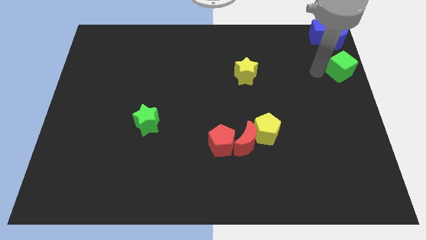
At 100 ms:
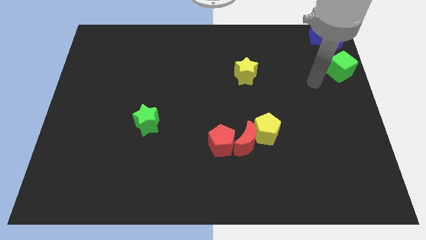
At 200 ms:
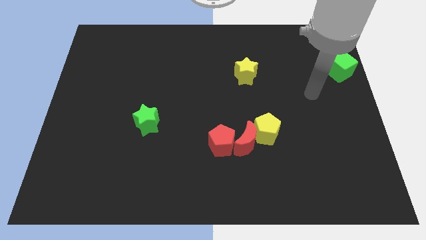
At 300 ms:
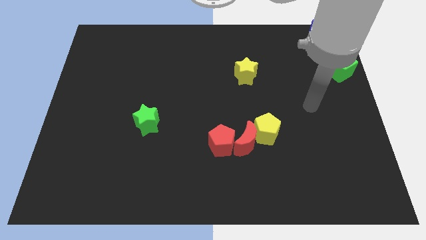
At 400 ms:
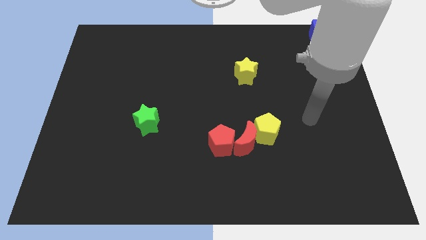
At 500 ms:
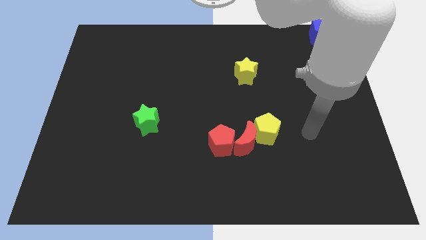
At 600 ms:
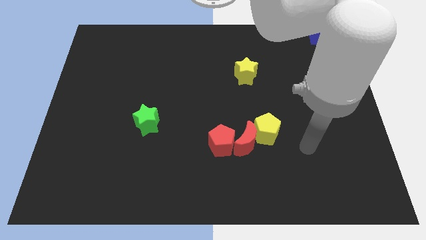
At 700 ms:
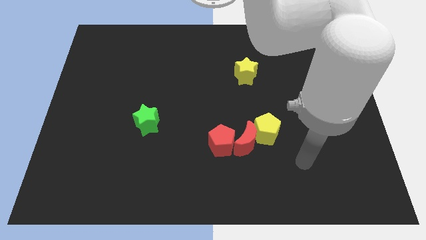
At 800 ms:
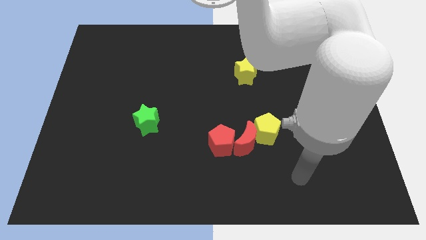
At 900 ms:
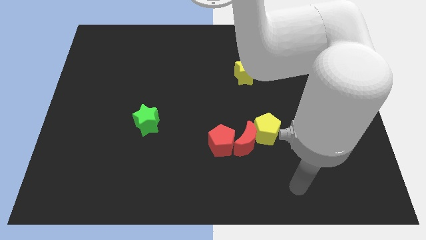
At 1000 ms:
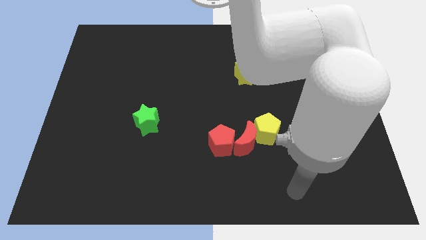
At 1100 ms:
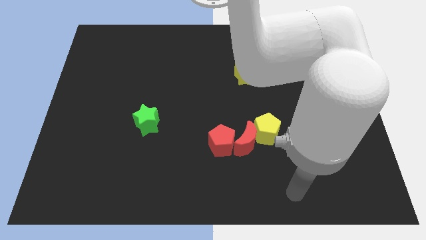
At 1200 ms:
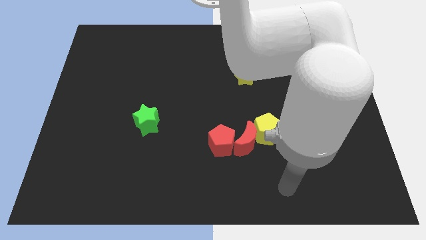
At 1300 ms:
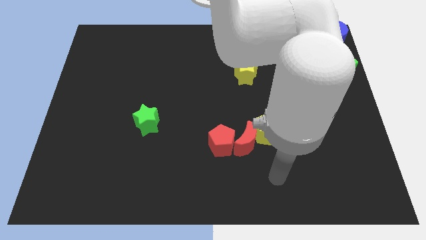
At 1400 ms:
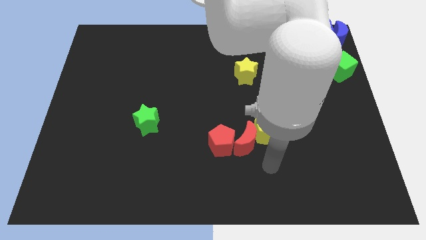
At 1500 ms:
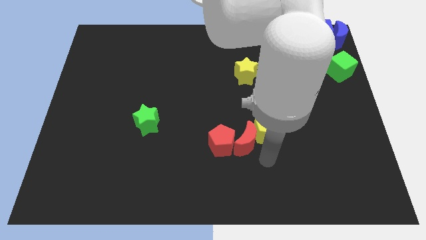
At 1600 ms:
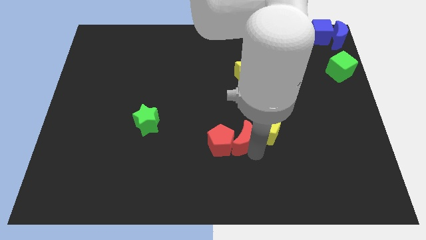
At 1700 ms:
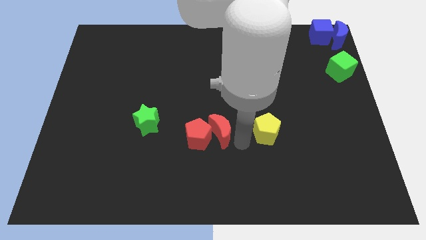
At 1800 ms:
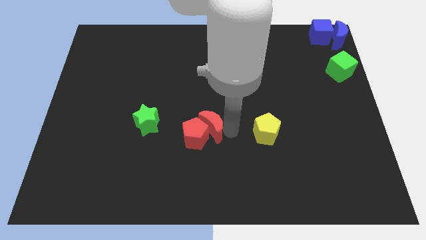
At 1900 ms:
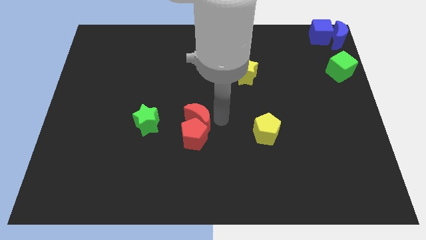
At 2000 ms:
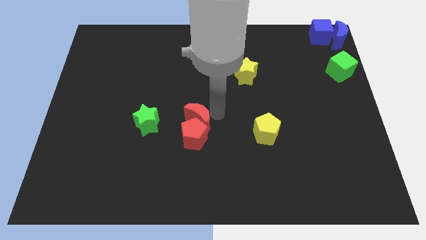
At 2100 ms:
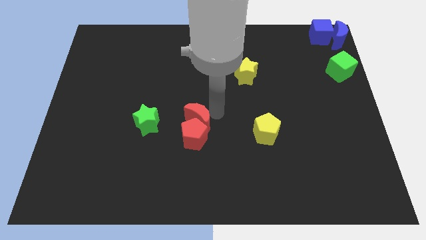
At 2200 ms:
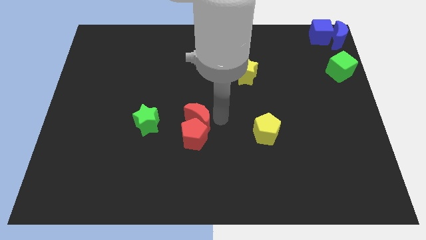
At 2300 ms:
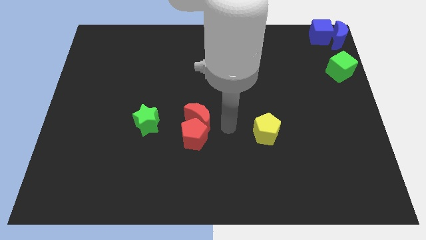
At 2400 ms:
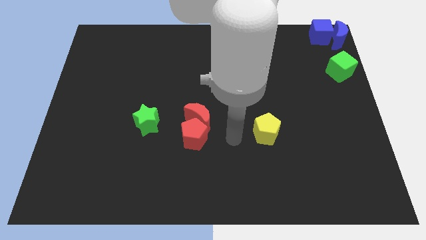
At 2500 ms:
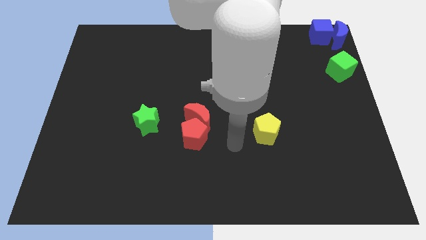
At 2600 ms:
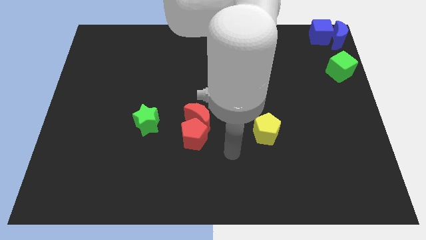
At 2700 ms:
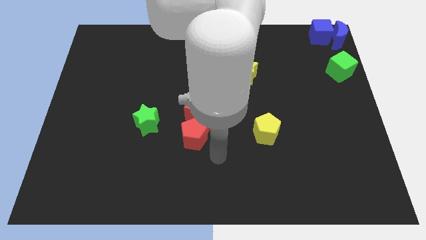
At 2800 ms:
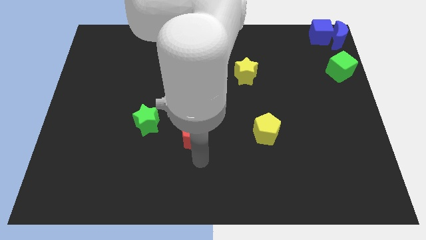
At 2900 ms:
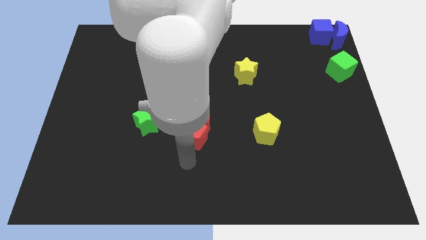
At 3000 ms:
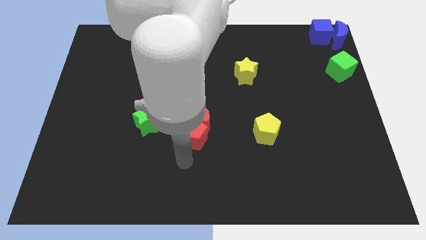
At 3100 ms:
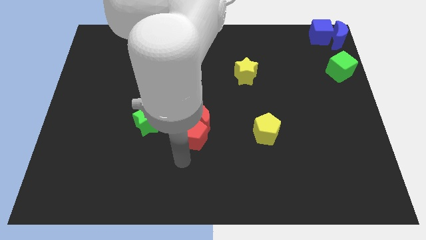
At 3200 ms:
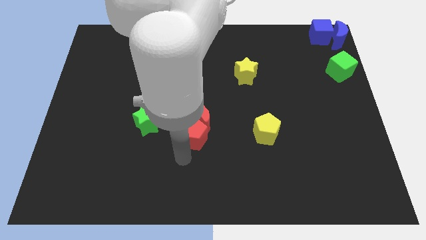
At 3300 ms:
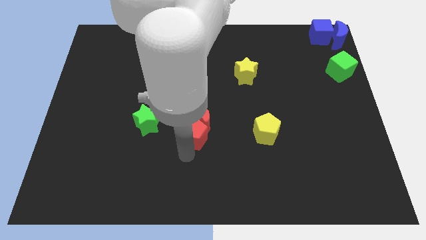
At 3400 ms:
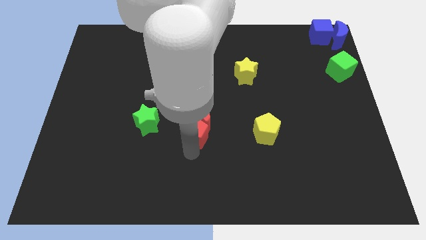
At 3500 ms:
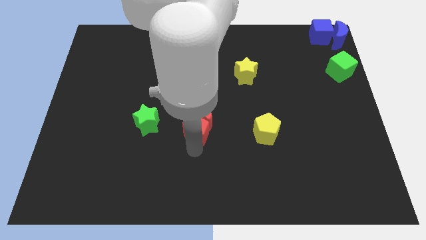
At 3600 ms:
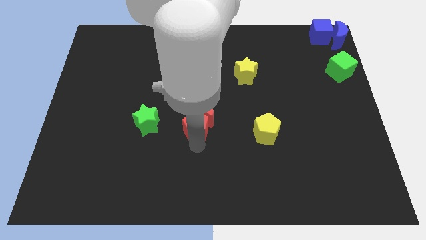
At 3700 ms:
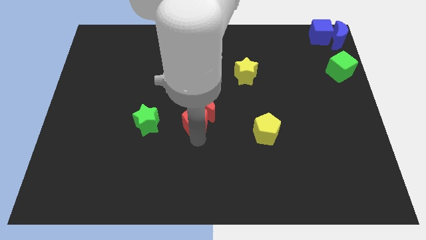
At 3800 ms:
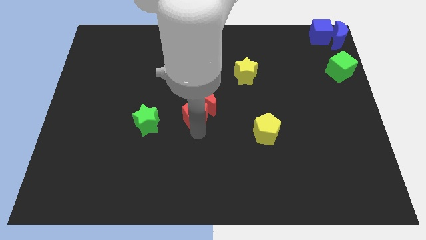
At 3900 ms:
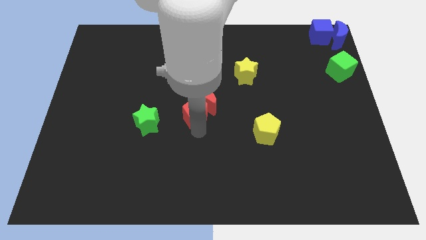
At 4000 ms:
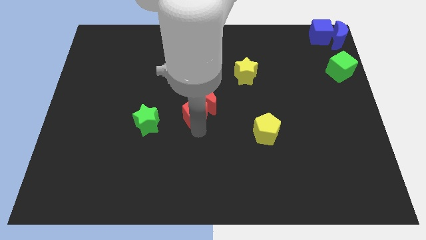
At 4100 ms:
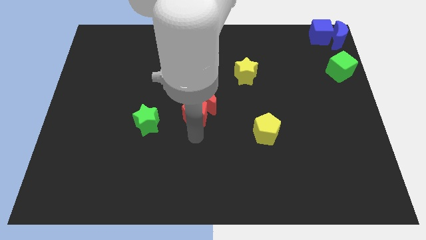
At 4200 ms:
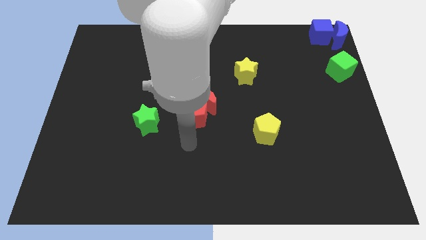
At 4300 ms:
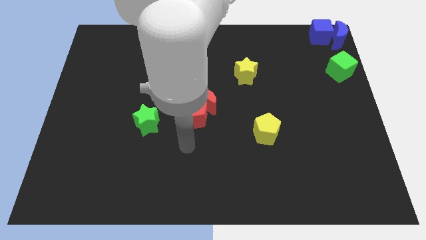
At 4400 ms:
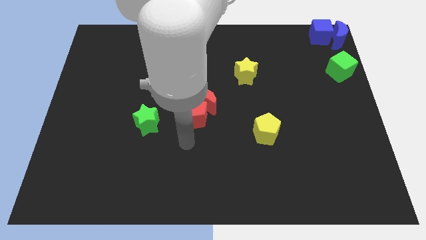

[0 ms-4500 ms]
move the red blocks away from the yellow pentagon

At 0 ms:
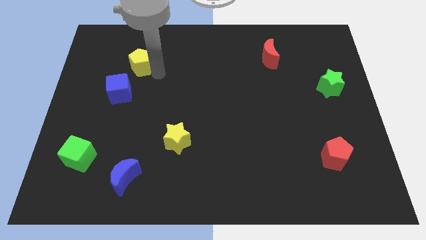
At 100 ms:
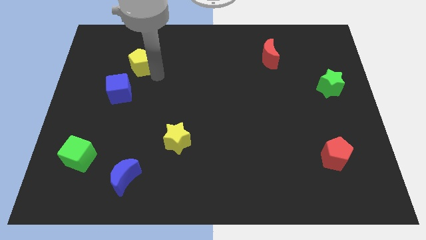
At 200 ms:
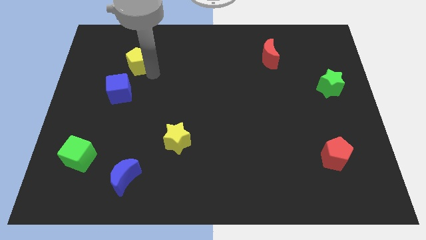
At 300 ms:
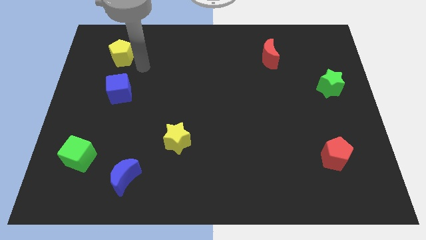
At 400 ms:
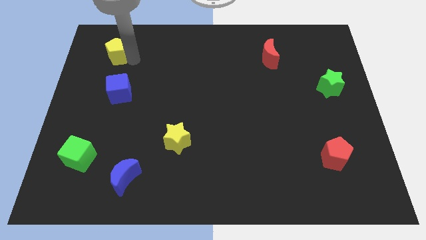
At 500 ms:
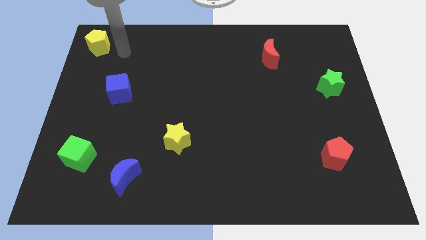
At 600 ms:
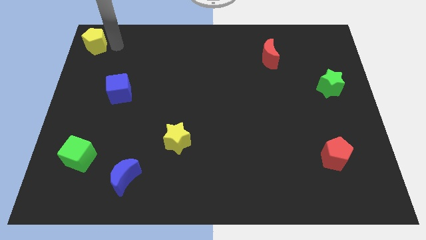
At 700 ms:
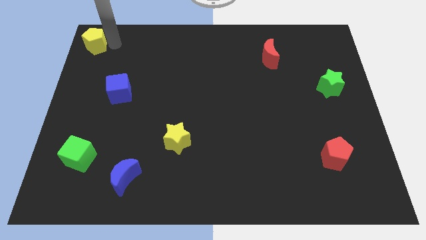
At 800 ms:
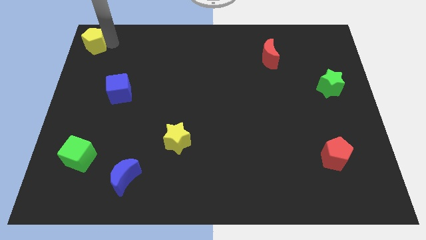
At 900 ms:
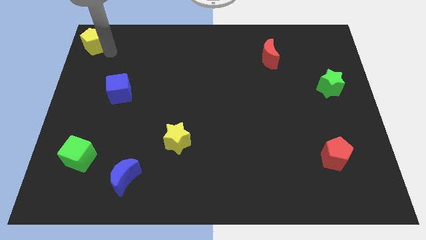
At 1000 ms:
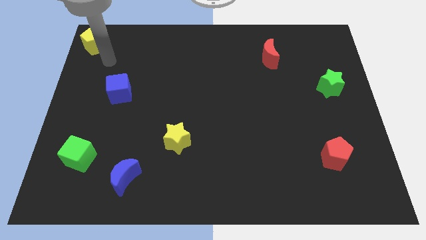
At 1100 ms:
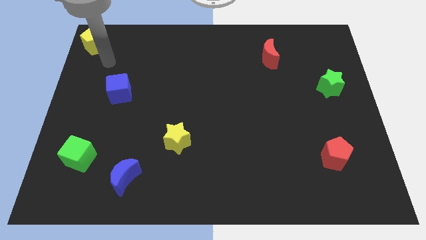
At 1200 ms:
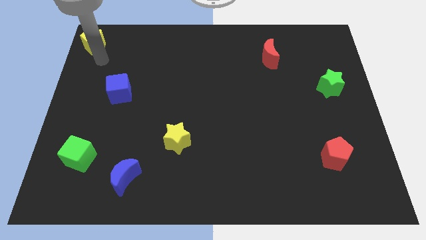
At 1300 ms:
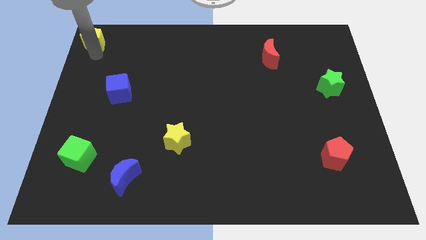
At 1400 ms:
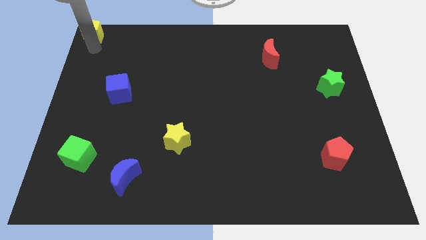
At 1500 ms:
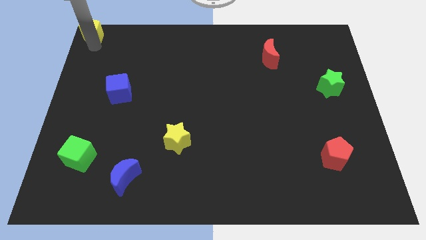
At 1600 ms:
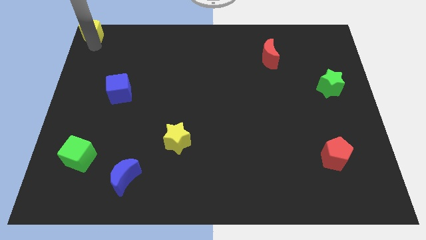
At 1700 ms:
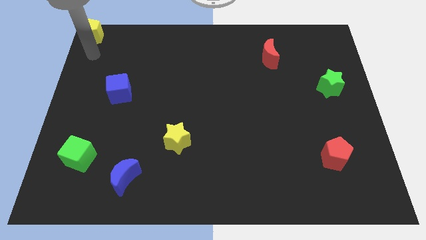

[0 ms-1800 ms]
place yellow pentagon towards top left corner

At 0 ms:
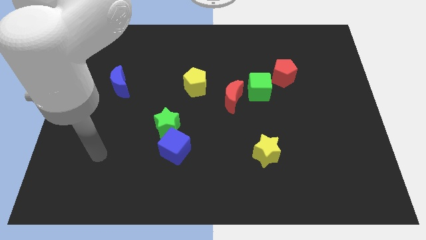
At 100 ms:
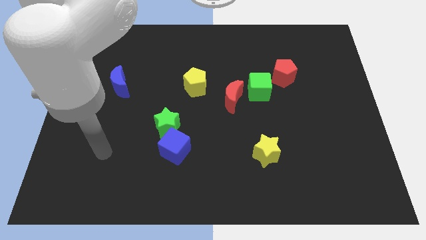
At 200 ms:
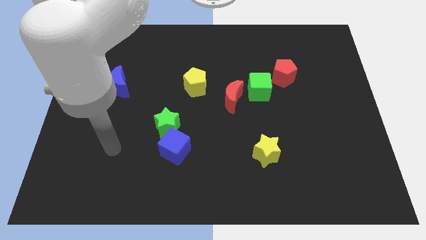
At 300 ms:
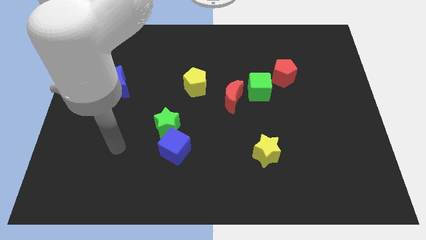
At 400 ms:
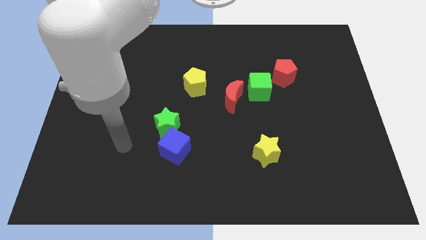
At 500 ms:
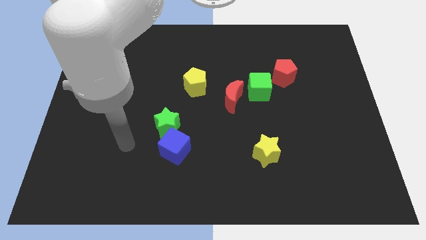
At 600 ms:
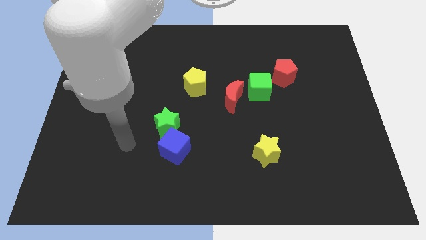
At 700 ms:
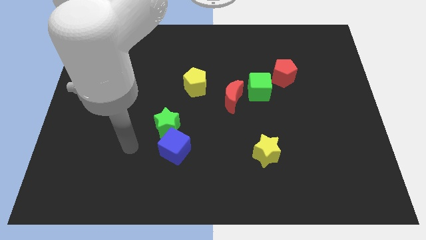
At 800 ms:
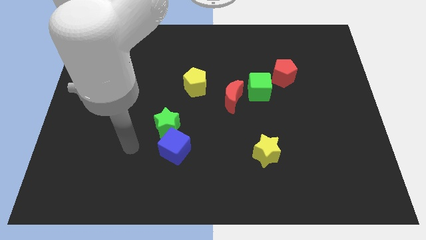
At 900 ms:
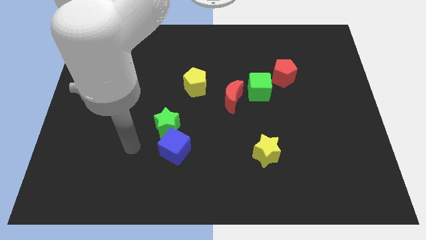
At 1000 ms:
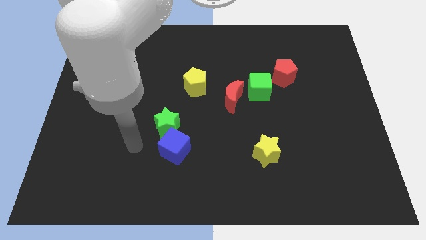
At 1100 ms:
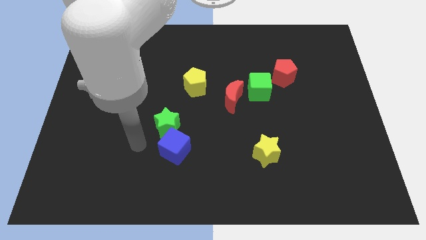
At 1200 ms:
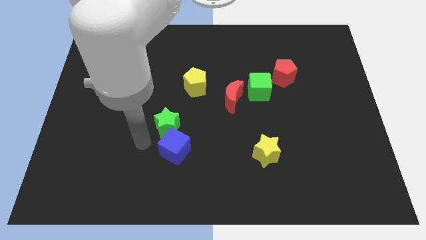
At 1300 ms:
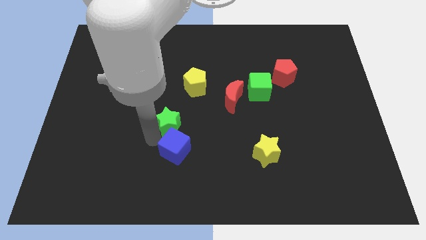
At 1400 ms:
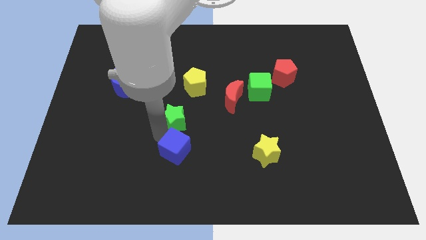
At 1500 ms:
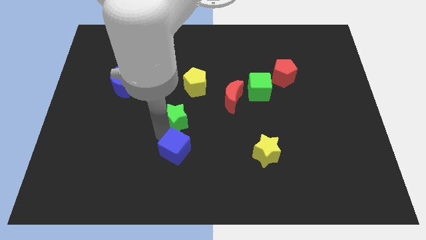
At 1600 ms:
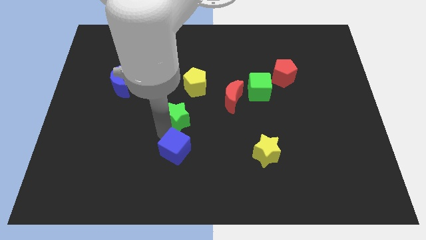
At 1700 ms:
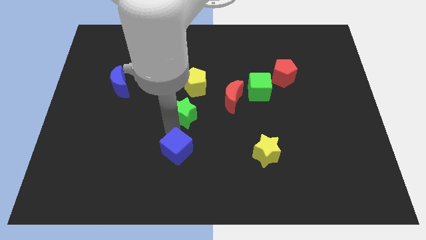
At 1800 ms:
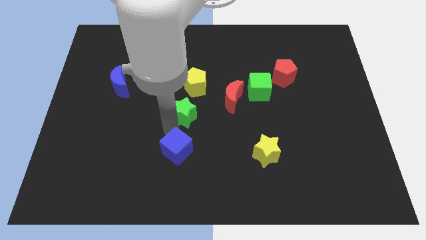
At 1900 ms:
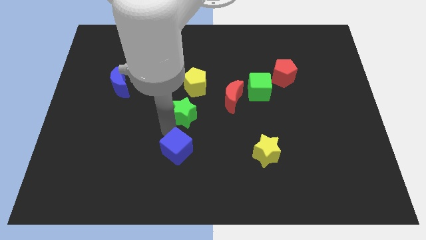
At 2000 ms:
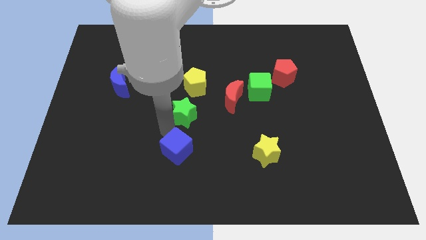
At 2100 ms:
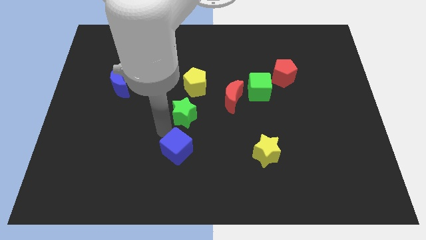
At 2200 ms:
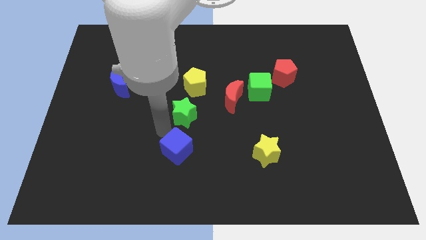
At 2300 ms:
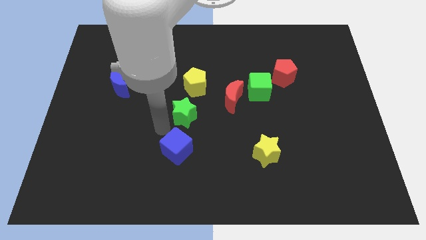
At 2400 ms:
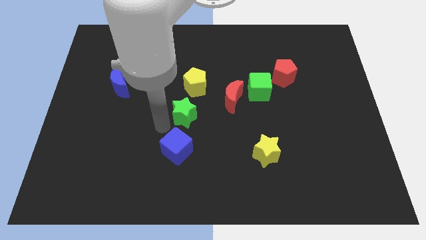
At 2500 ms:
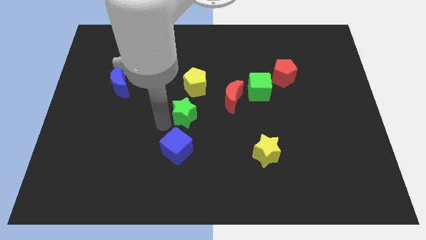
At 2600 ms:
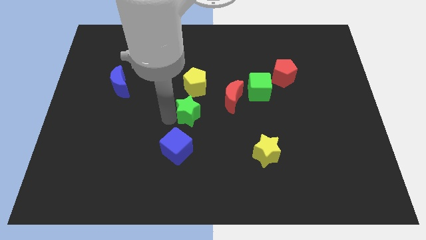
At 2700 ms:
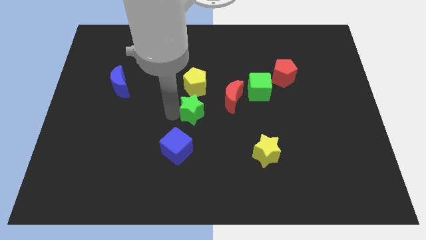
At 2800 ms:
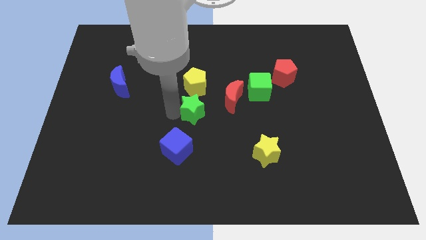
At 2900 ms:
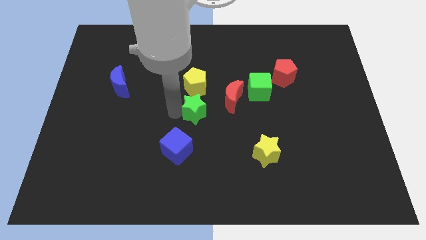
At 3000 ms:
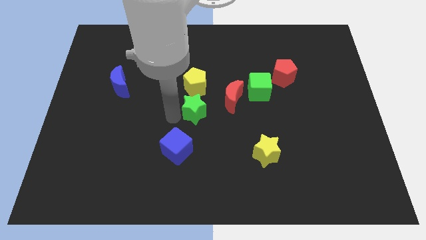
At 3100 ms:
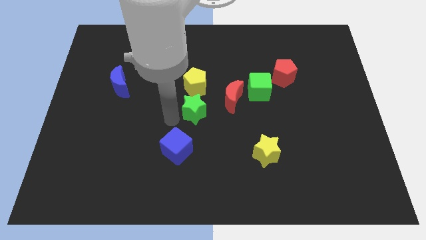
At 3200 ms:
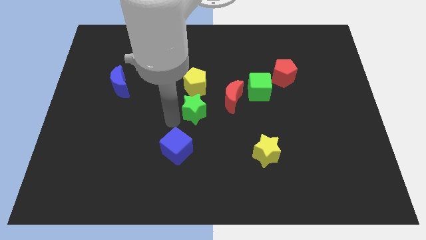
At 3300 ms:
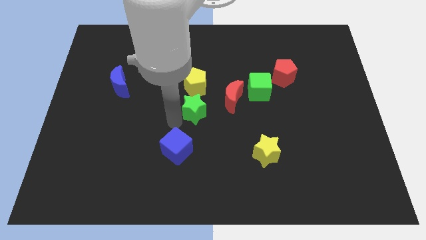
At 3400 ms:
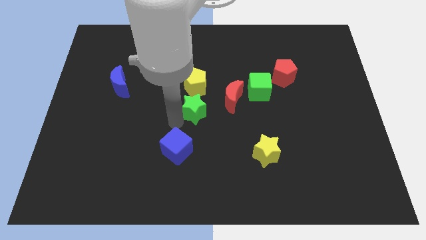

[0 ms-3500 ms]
separate green star from the blue cube
